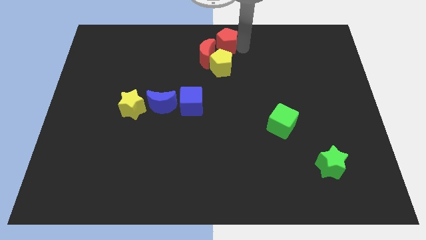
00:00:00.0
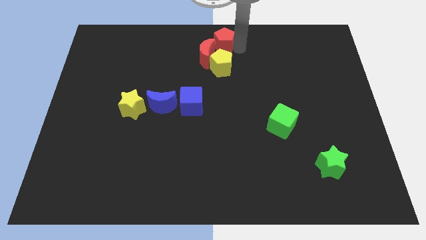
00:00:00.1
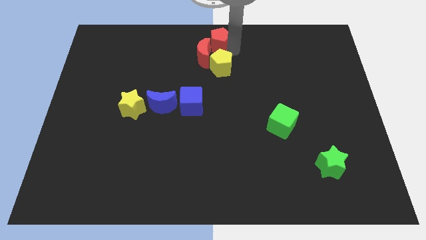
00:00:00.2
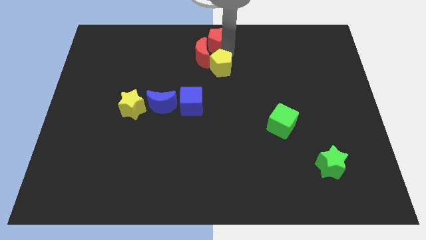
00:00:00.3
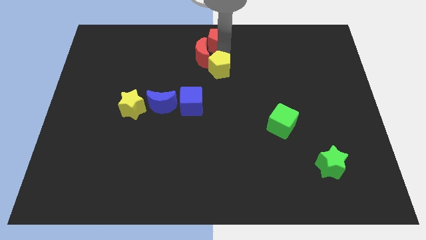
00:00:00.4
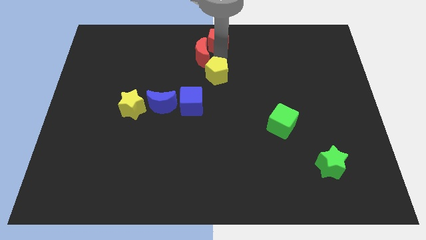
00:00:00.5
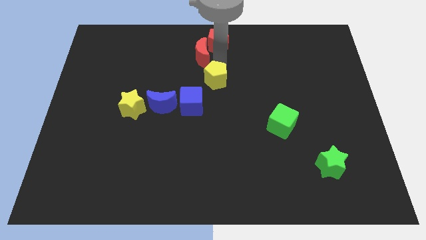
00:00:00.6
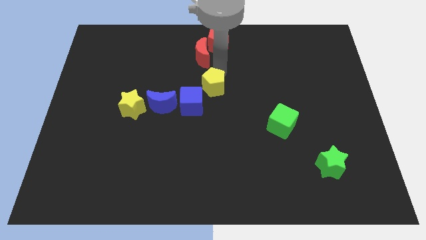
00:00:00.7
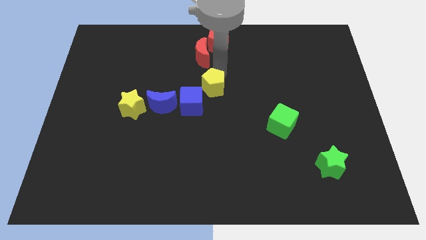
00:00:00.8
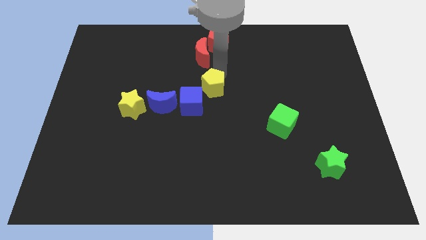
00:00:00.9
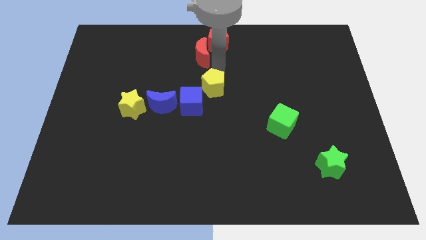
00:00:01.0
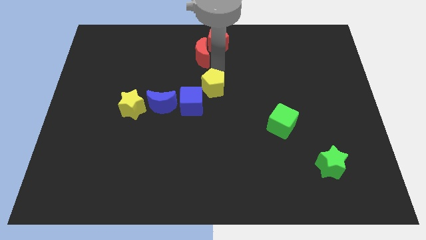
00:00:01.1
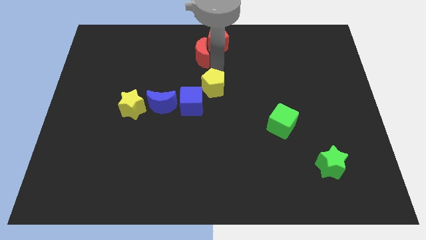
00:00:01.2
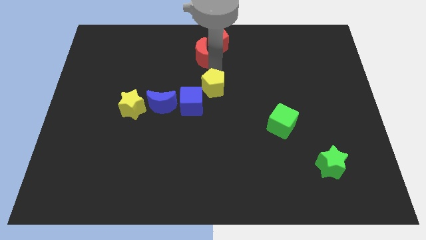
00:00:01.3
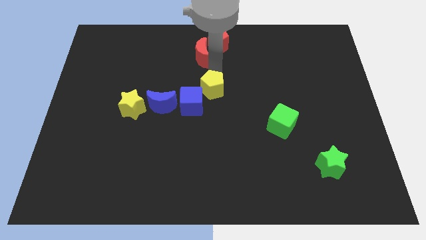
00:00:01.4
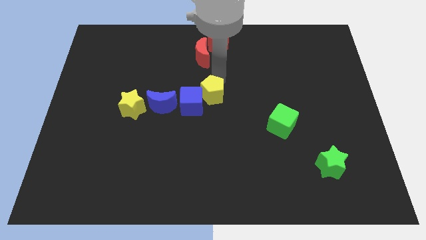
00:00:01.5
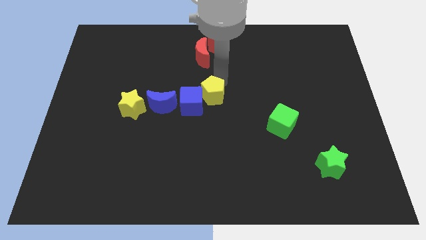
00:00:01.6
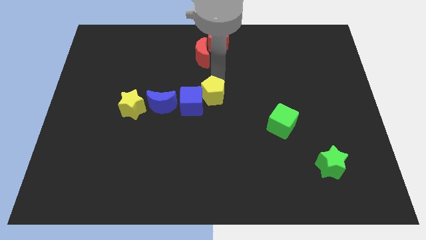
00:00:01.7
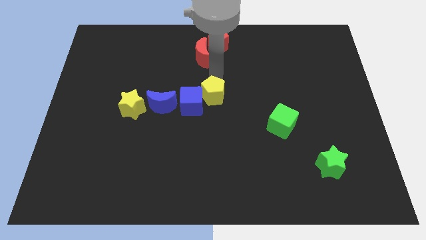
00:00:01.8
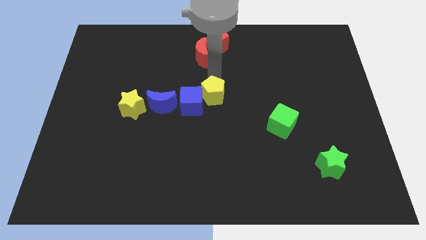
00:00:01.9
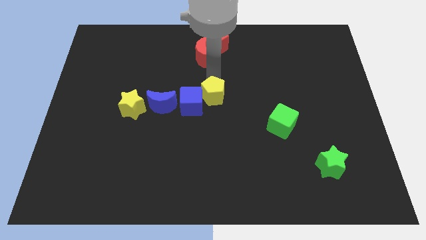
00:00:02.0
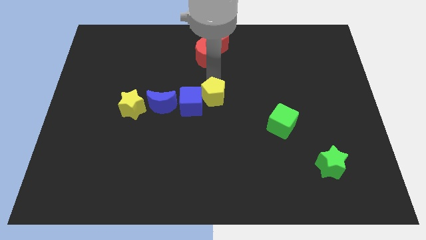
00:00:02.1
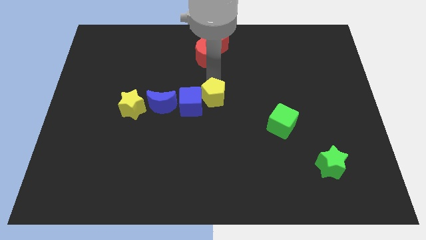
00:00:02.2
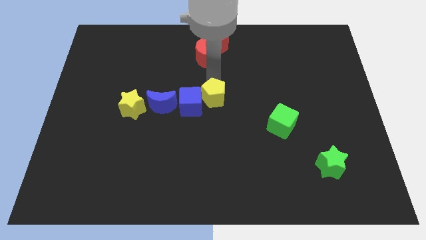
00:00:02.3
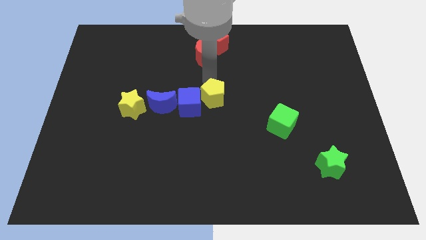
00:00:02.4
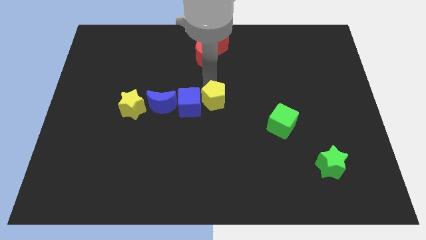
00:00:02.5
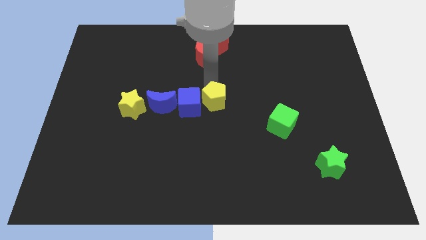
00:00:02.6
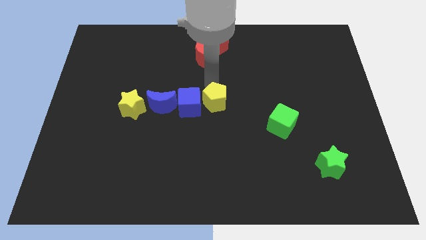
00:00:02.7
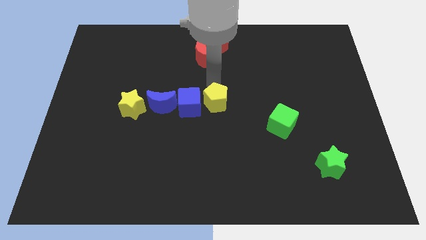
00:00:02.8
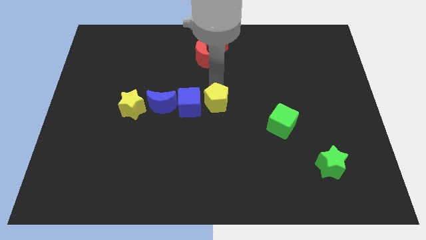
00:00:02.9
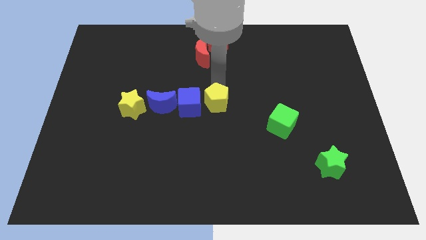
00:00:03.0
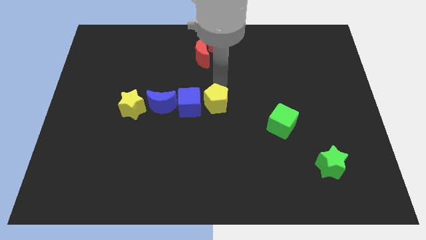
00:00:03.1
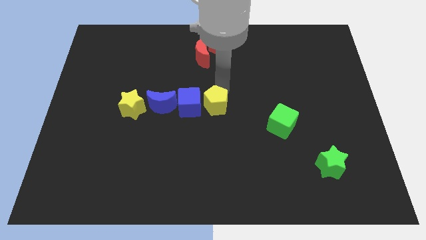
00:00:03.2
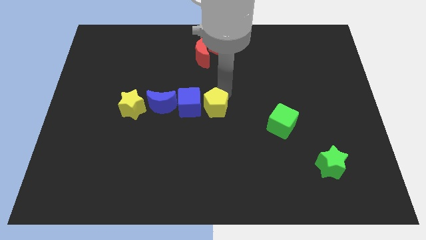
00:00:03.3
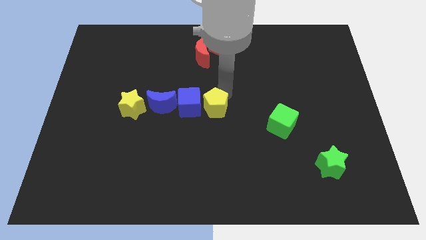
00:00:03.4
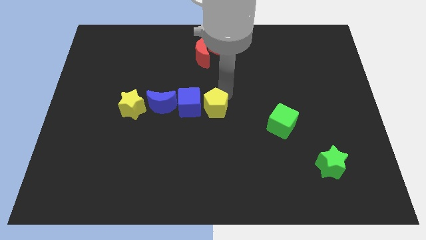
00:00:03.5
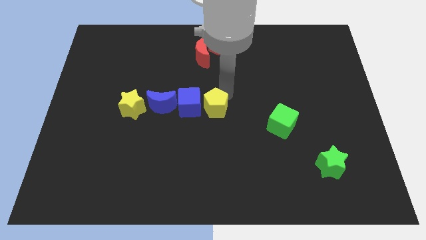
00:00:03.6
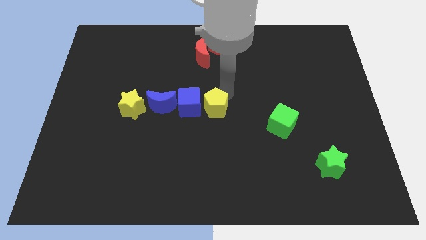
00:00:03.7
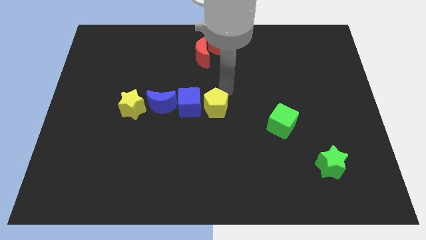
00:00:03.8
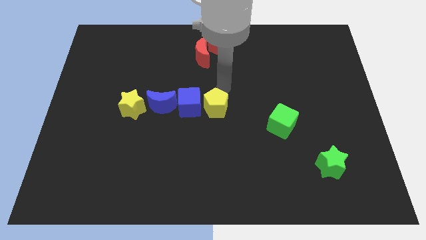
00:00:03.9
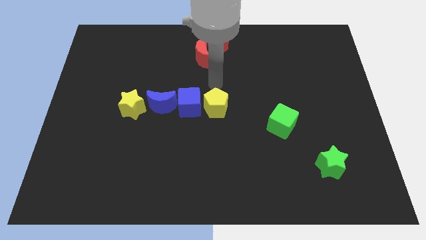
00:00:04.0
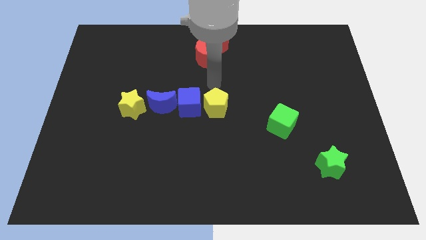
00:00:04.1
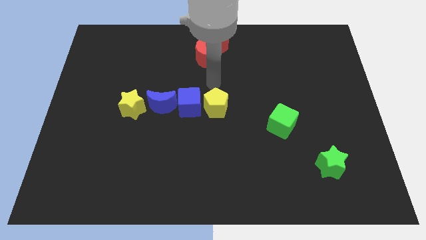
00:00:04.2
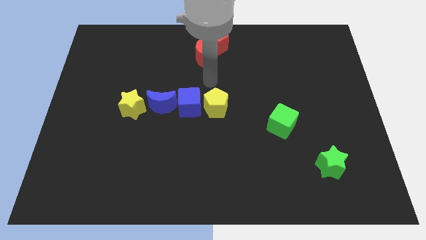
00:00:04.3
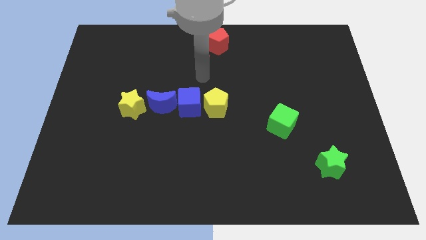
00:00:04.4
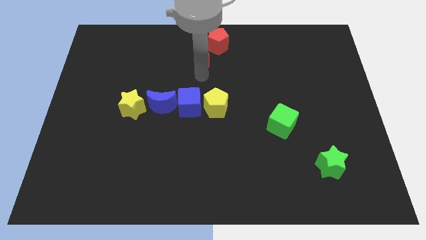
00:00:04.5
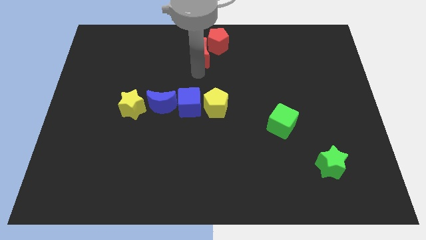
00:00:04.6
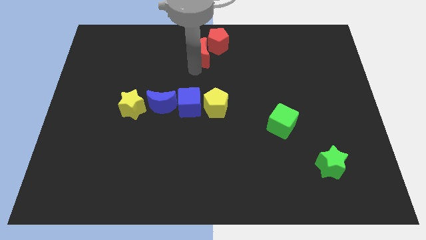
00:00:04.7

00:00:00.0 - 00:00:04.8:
push the yellow pentagon towards the center of the board

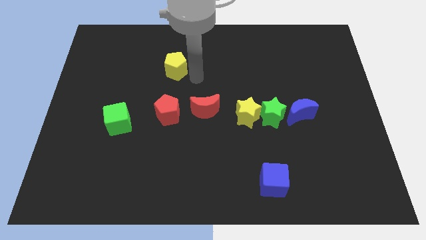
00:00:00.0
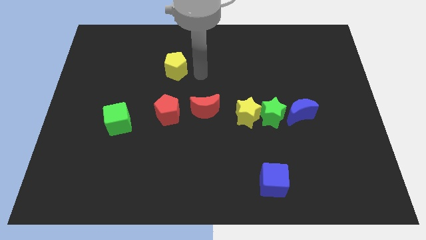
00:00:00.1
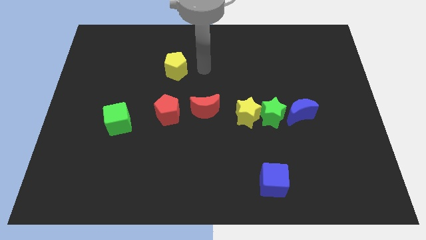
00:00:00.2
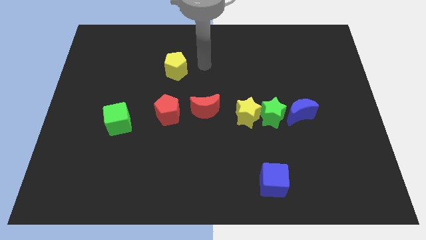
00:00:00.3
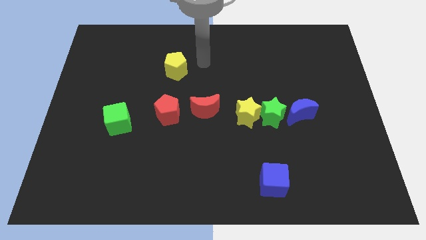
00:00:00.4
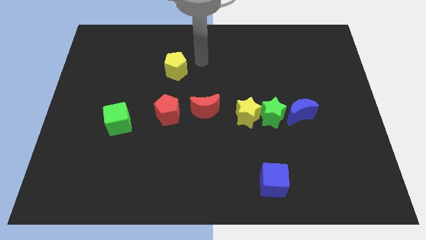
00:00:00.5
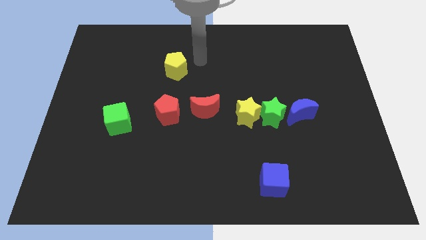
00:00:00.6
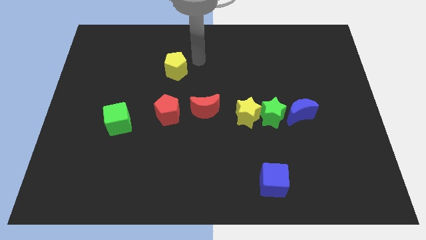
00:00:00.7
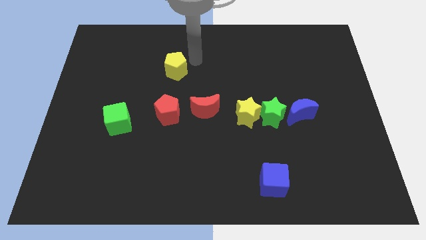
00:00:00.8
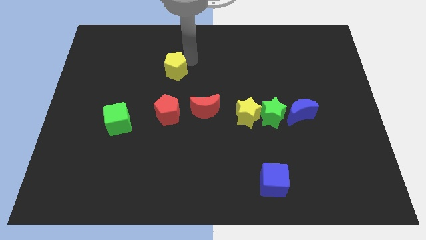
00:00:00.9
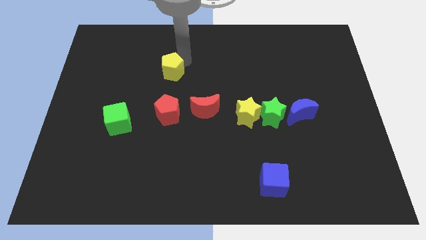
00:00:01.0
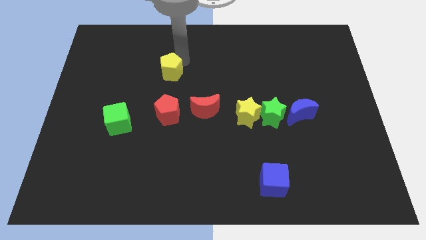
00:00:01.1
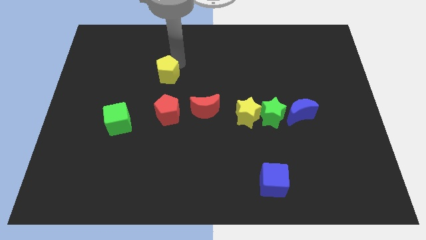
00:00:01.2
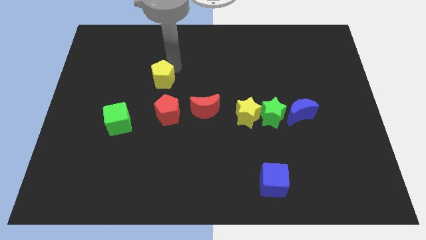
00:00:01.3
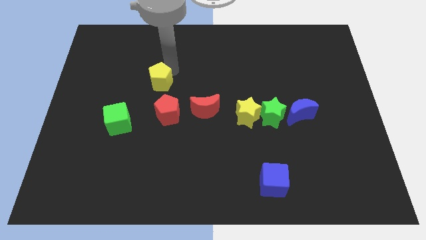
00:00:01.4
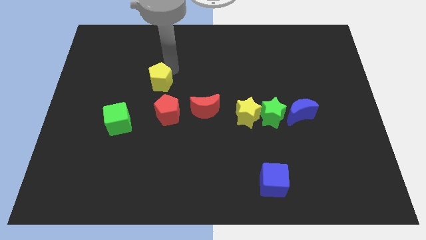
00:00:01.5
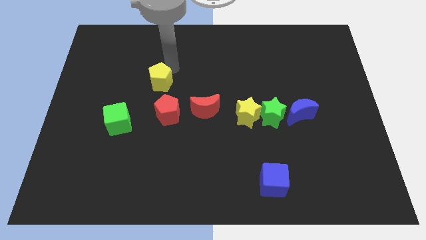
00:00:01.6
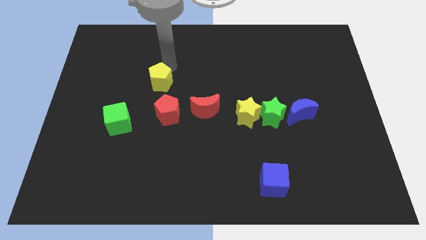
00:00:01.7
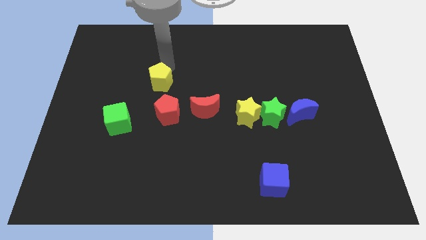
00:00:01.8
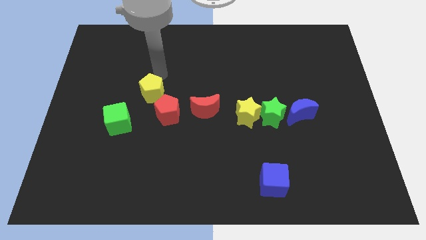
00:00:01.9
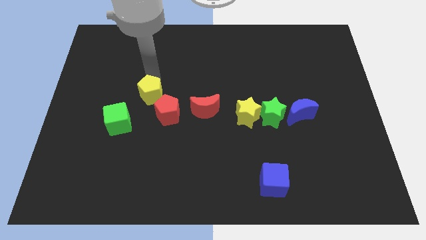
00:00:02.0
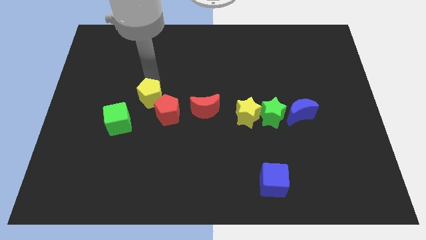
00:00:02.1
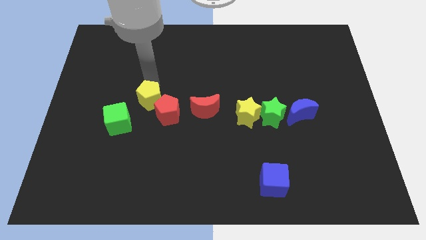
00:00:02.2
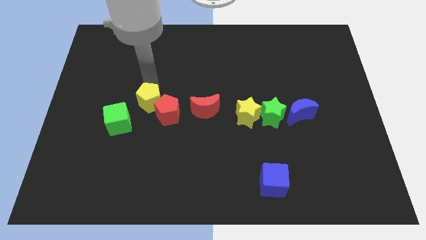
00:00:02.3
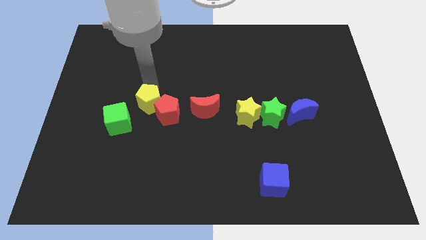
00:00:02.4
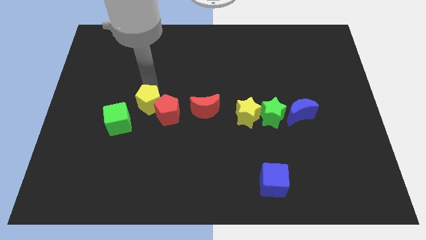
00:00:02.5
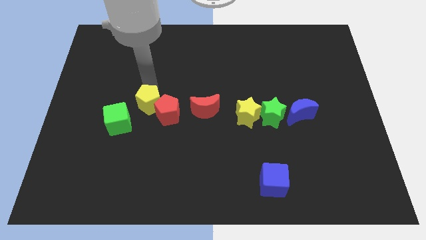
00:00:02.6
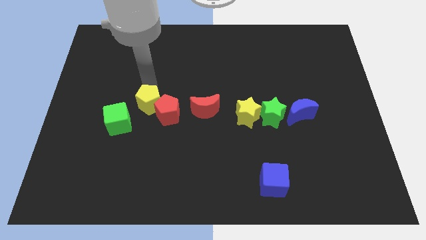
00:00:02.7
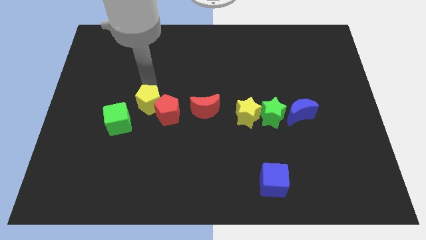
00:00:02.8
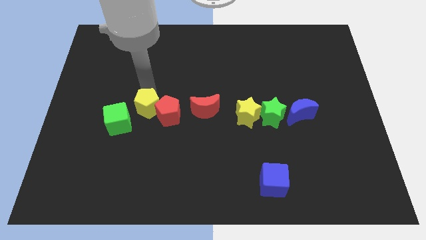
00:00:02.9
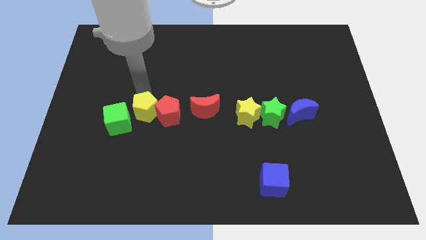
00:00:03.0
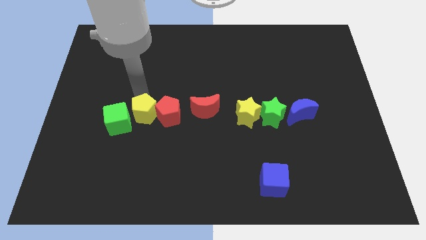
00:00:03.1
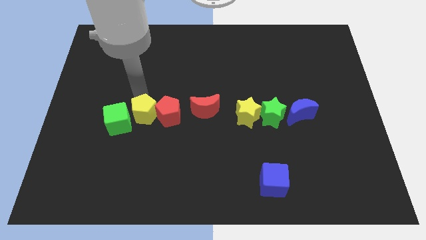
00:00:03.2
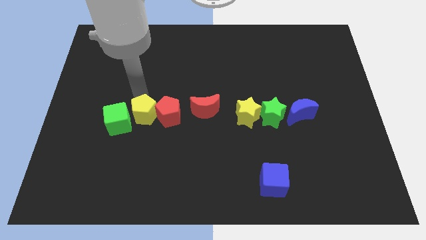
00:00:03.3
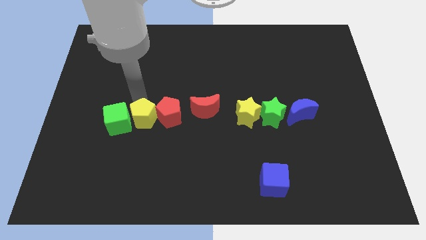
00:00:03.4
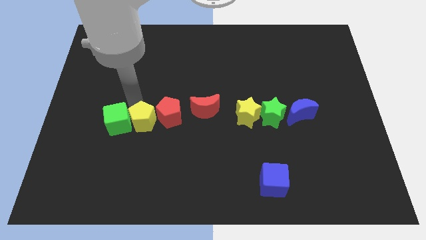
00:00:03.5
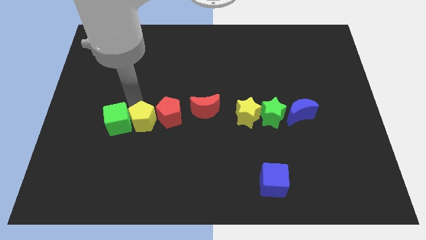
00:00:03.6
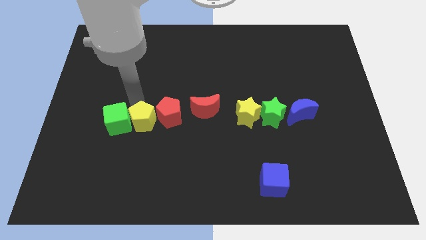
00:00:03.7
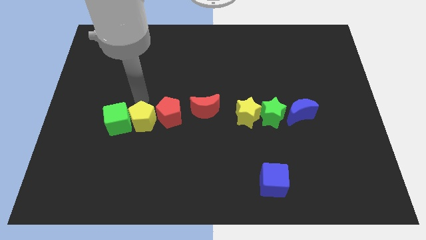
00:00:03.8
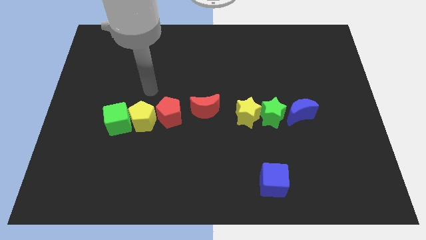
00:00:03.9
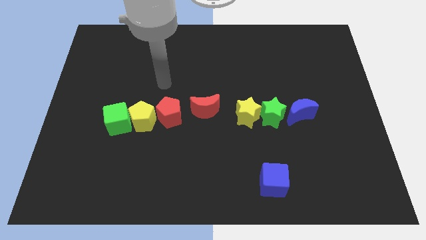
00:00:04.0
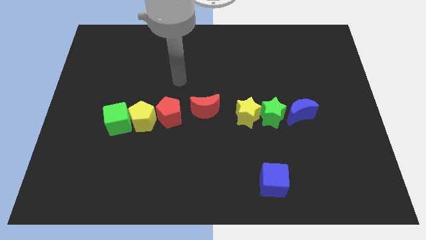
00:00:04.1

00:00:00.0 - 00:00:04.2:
push the yellow pentagon in between red pentagon and green cube
